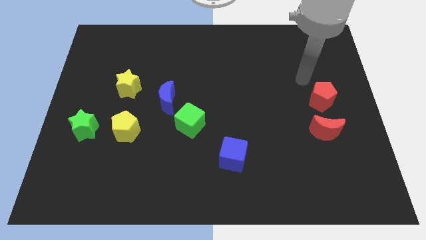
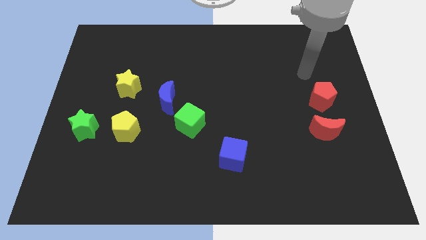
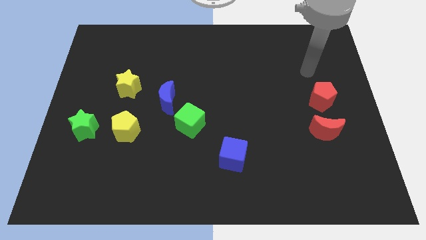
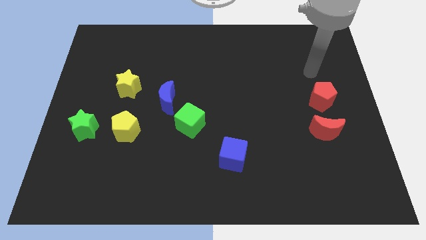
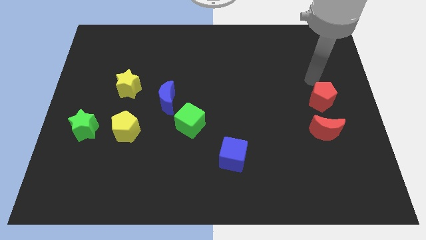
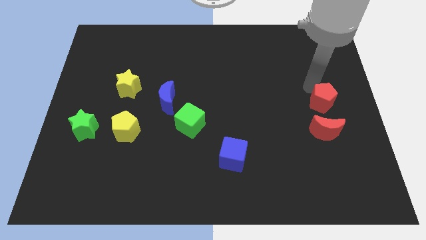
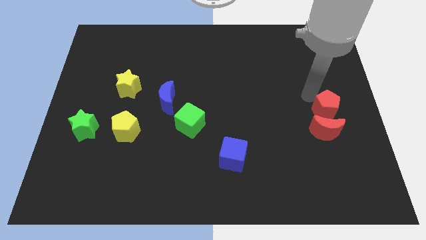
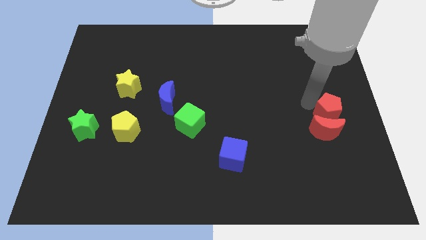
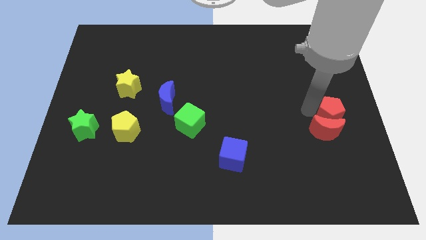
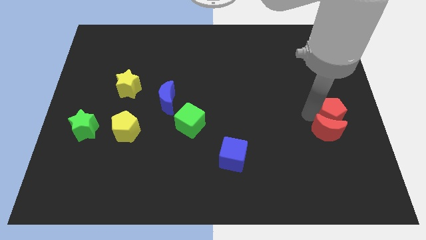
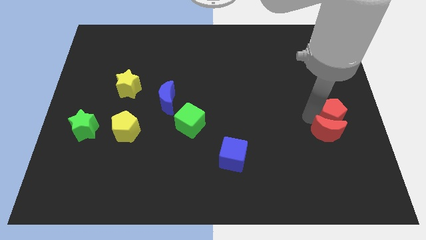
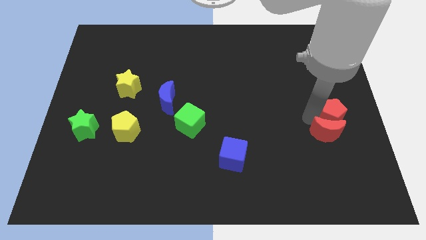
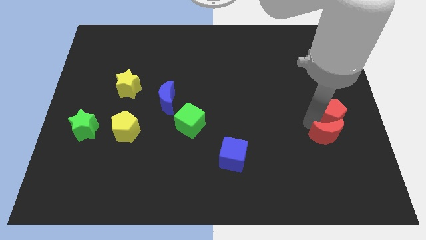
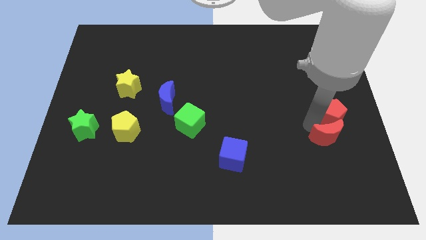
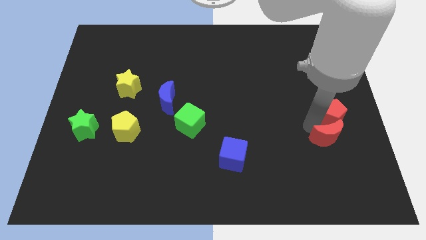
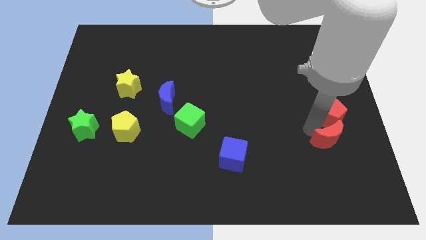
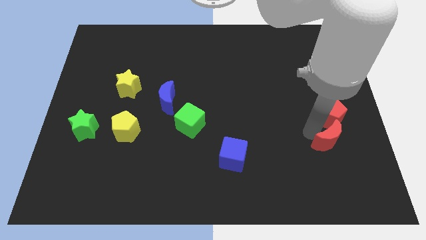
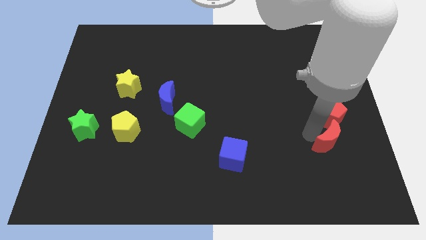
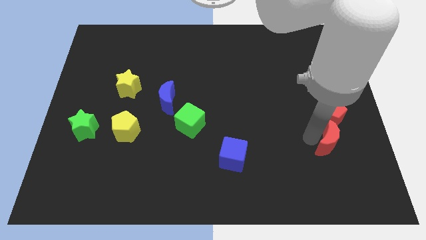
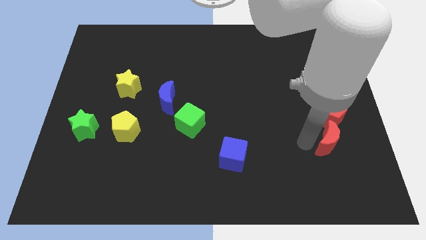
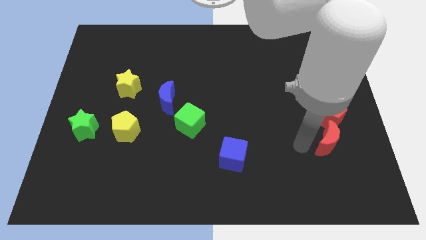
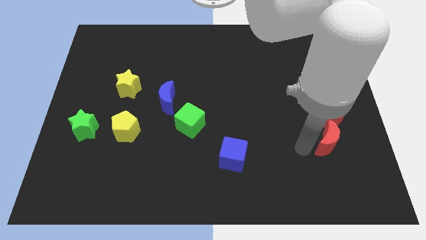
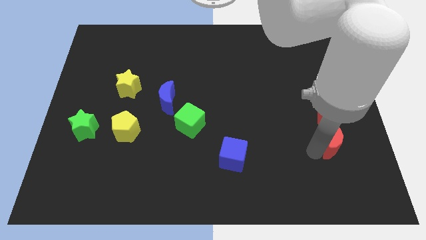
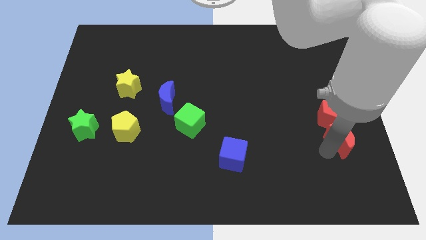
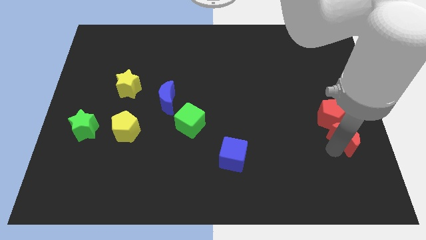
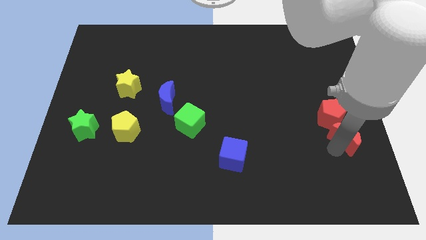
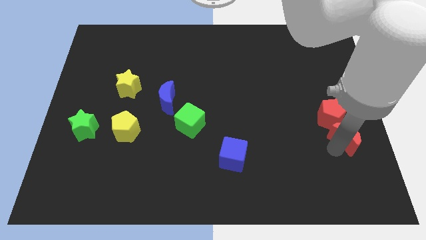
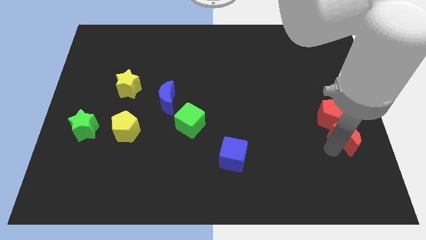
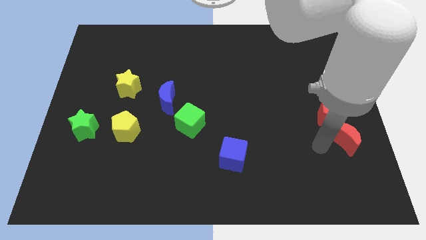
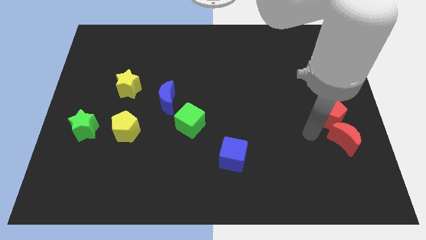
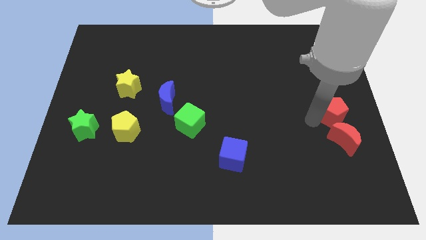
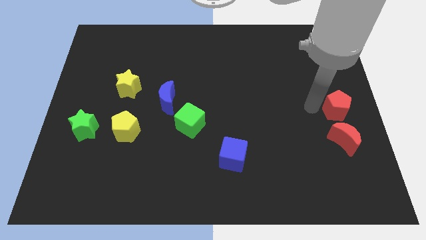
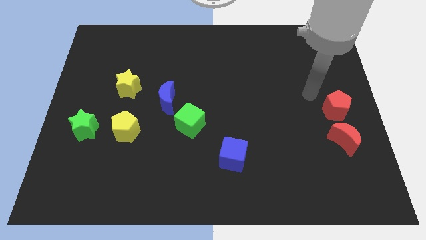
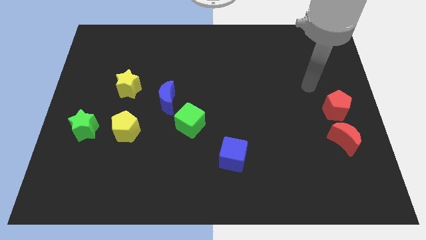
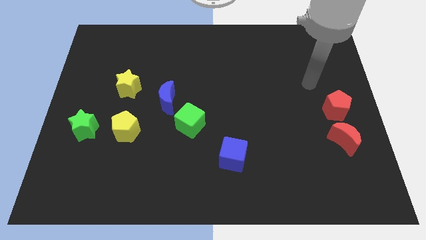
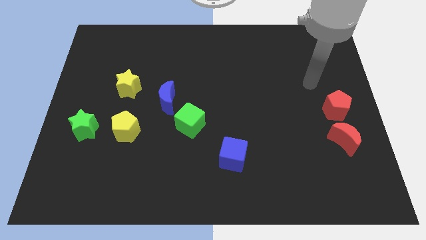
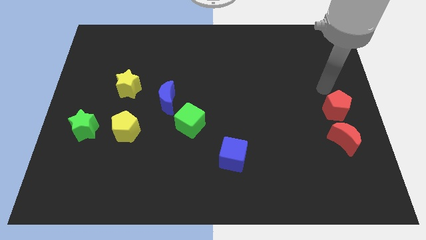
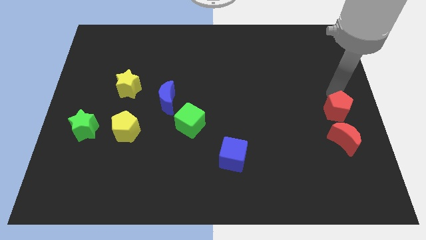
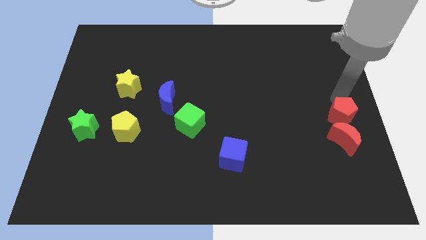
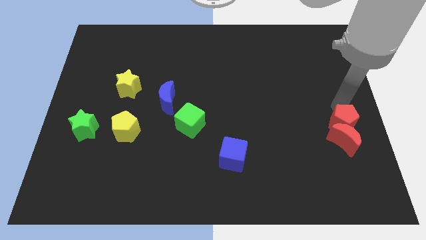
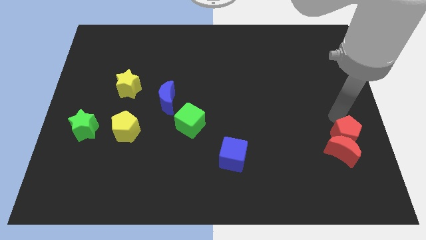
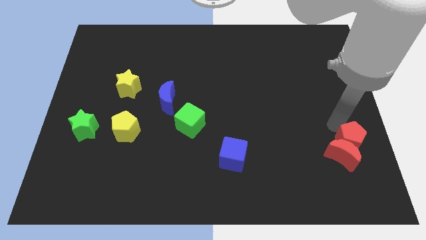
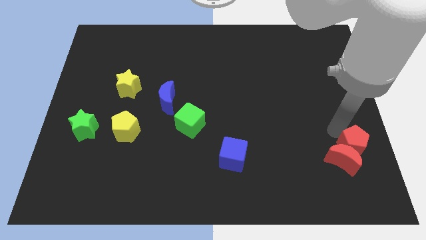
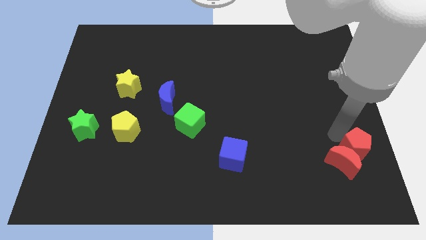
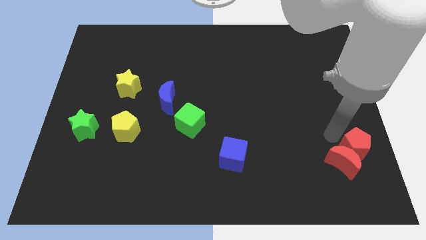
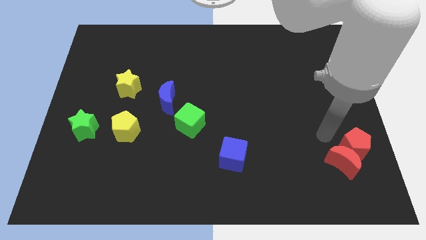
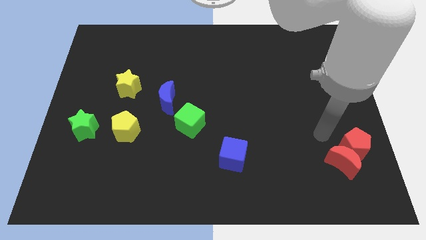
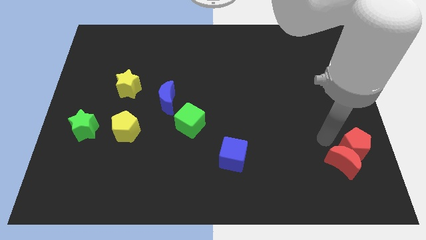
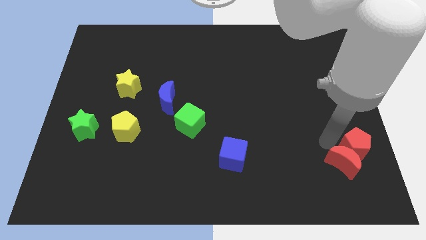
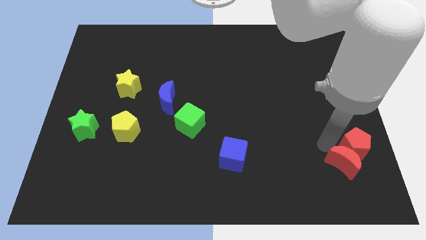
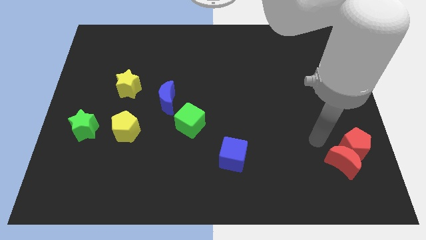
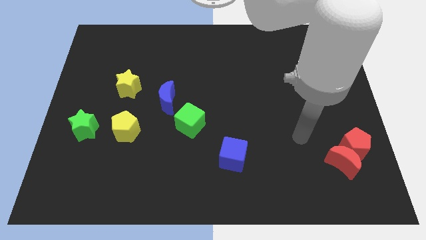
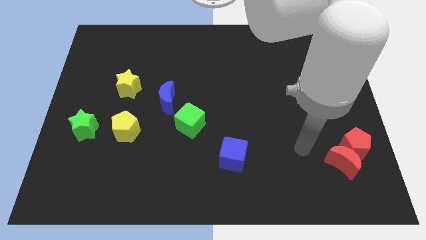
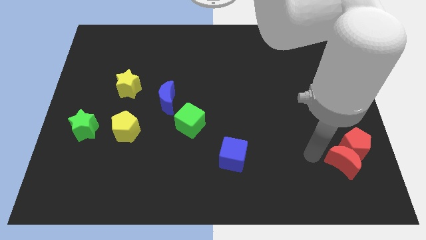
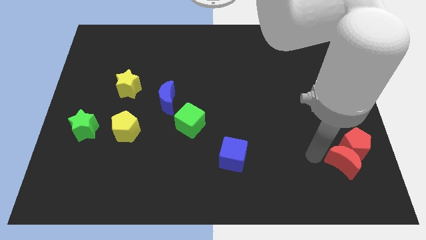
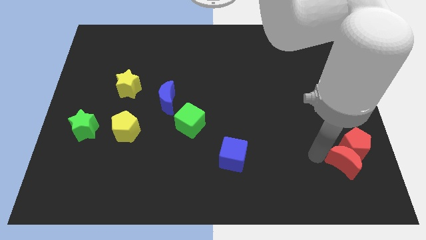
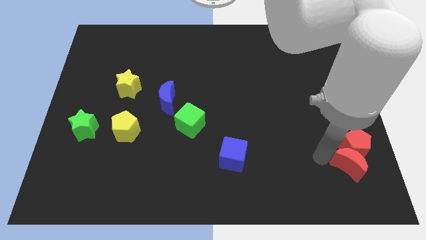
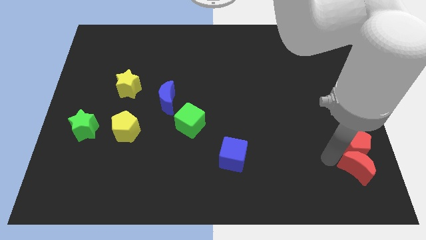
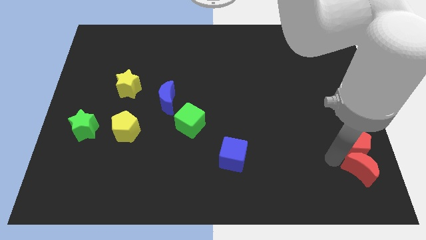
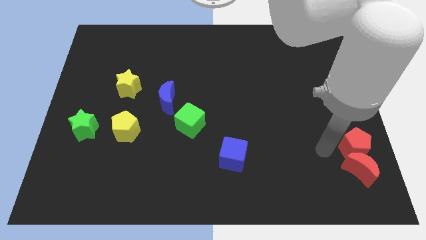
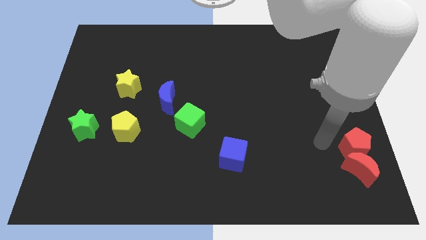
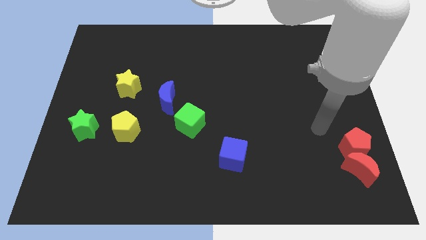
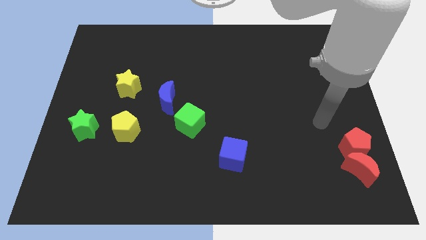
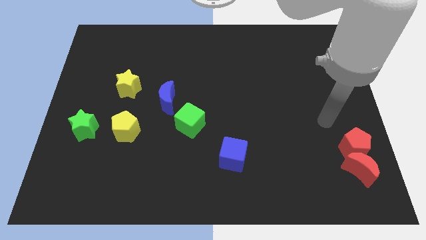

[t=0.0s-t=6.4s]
push the red pentagon into the red crescent

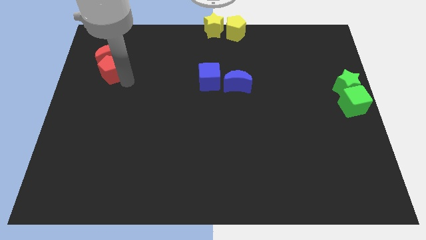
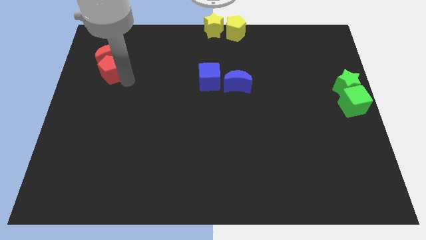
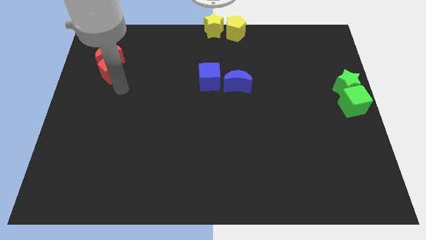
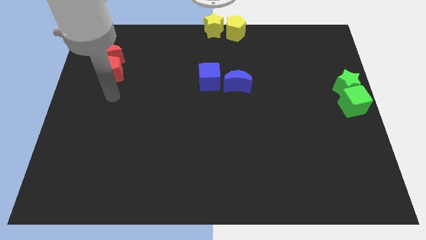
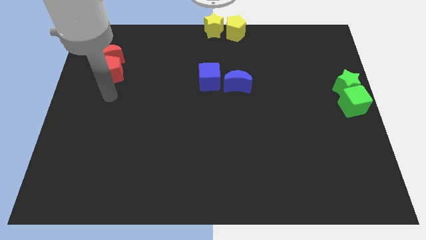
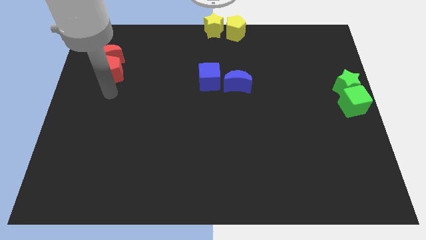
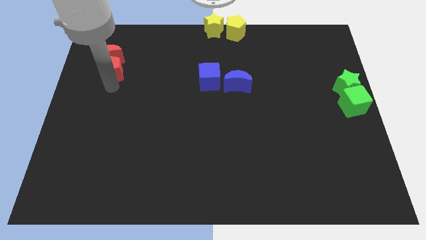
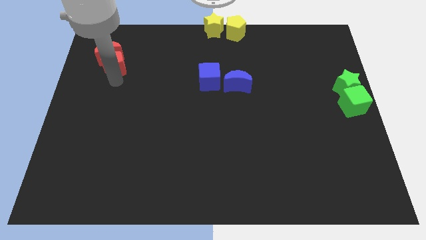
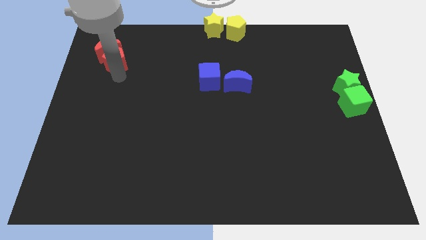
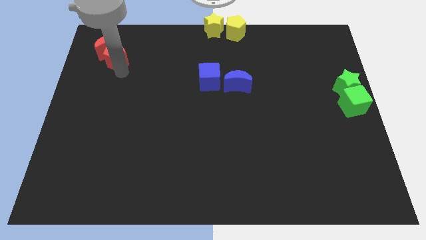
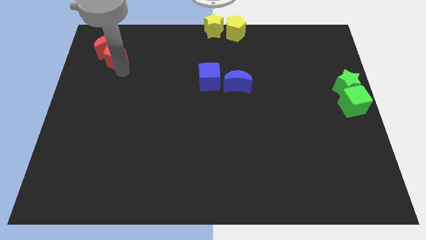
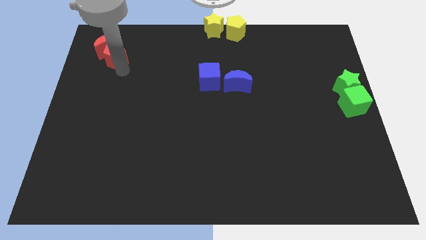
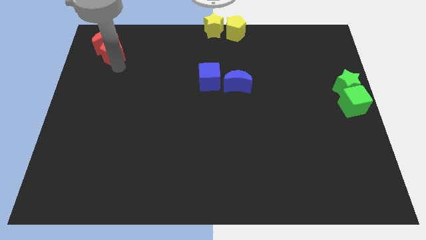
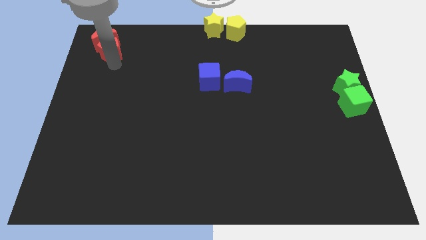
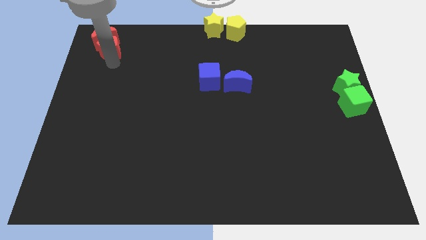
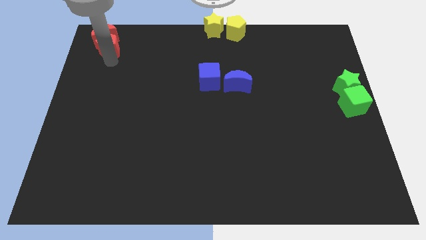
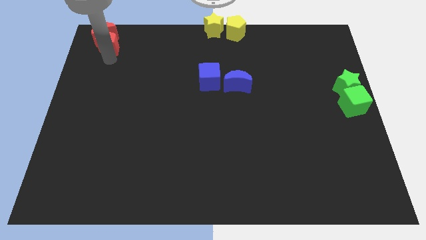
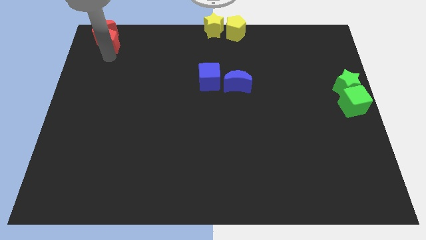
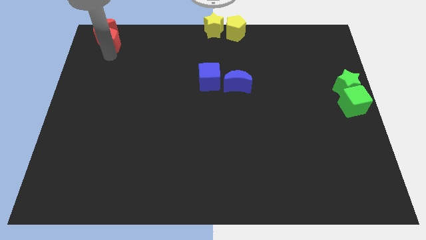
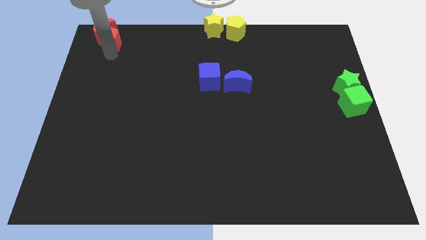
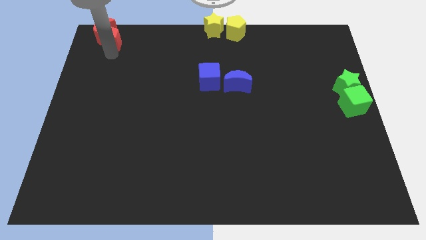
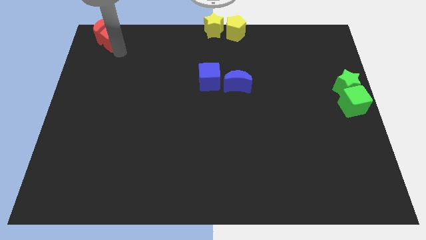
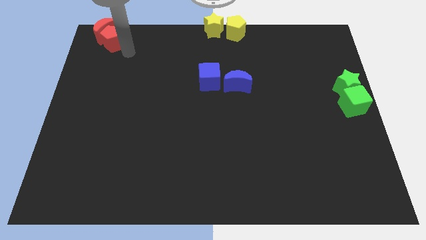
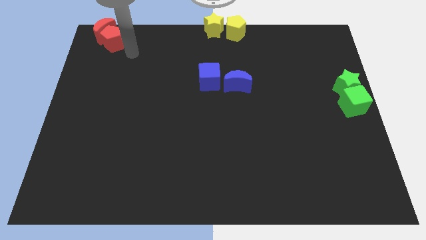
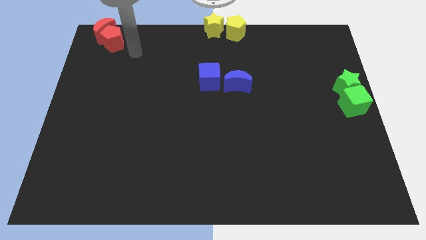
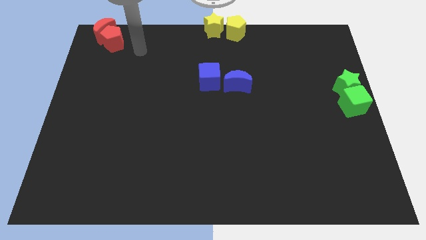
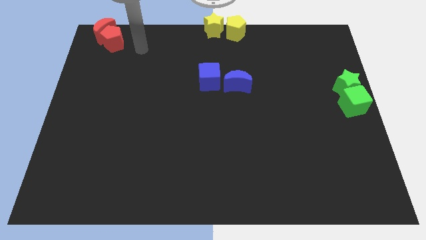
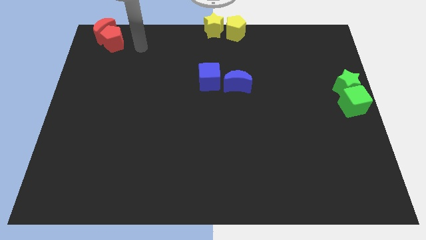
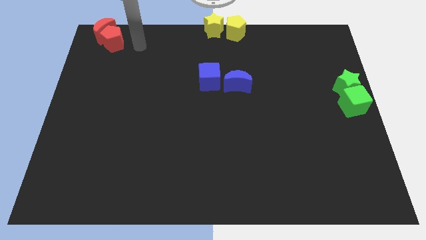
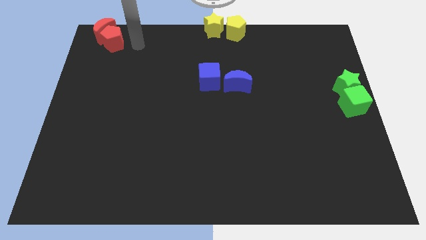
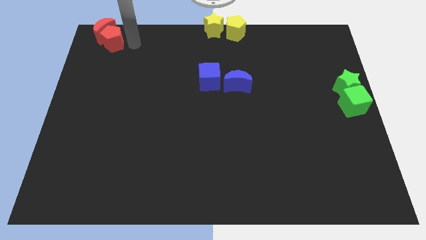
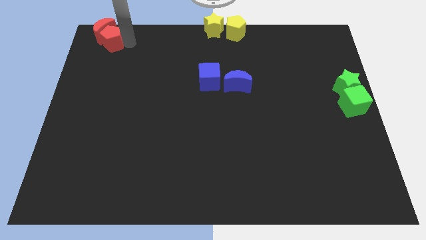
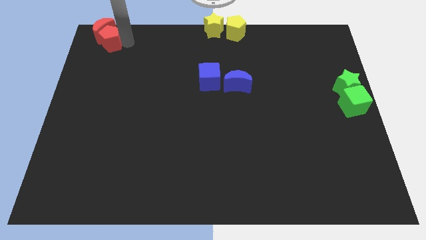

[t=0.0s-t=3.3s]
move the red pentagon along with red crescent to the top left corner of the board
